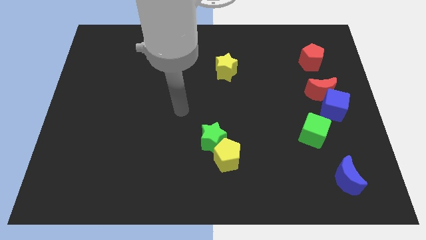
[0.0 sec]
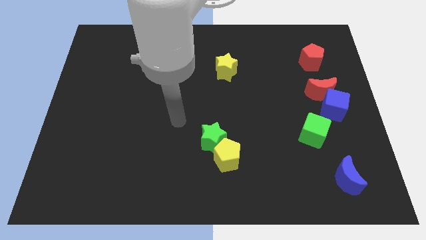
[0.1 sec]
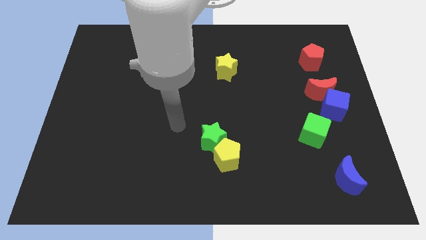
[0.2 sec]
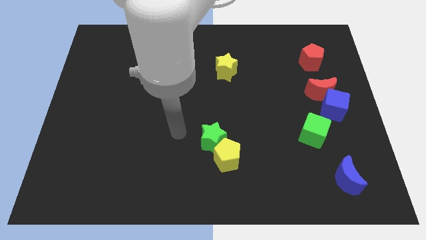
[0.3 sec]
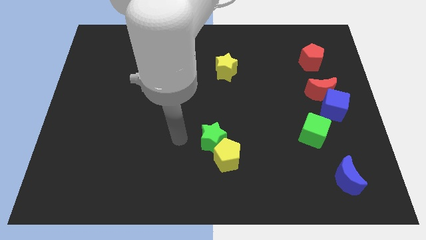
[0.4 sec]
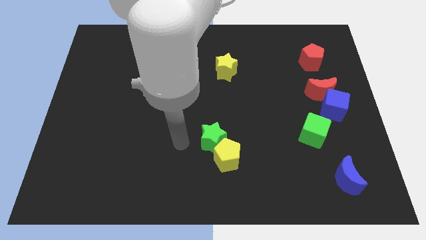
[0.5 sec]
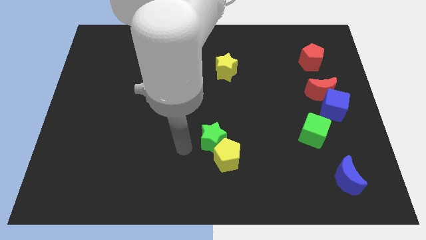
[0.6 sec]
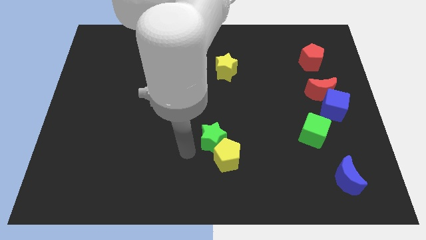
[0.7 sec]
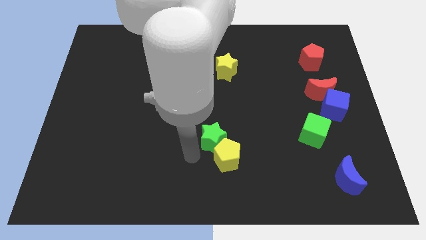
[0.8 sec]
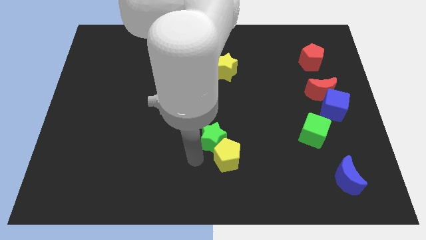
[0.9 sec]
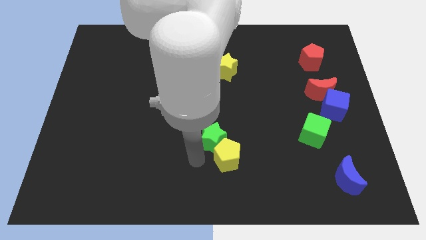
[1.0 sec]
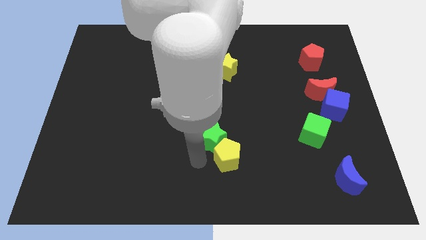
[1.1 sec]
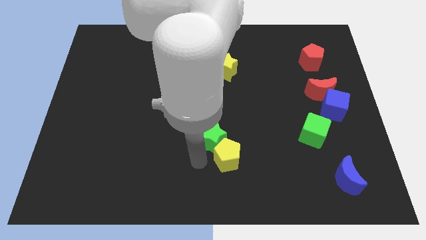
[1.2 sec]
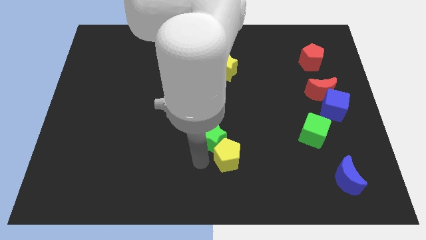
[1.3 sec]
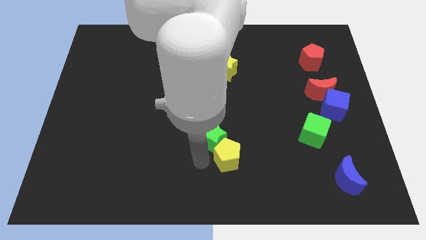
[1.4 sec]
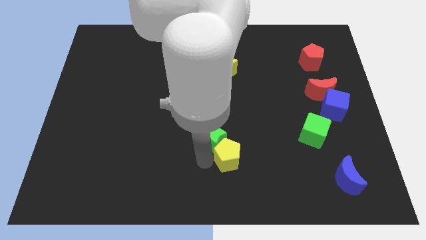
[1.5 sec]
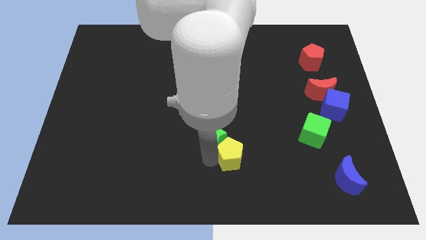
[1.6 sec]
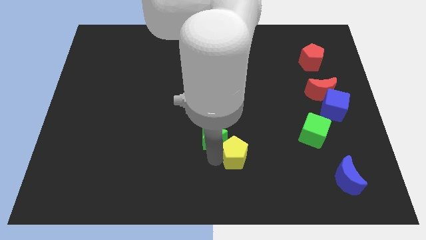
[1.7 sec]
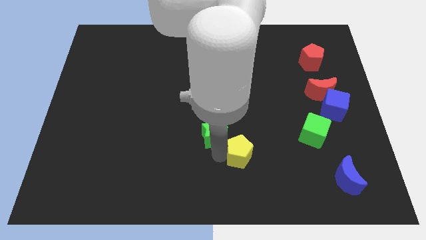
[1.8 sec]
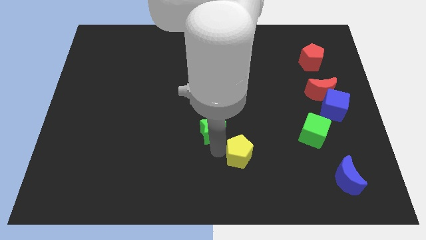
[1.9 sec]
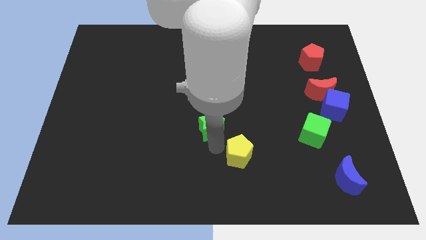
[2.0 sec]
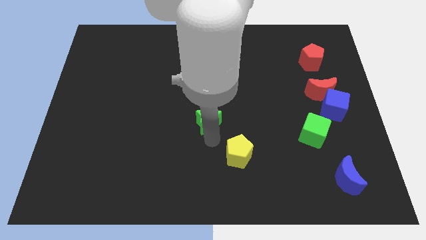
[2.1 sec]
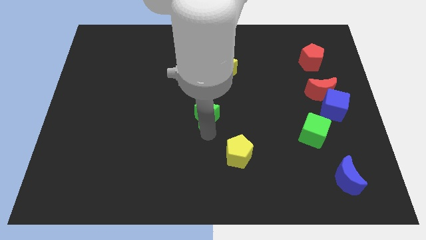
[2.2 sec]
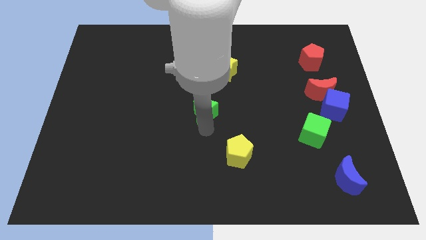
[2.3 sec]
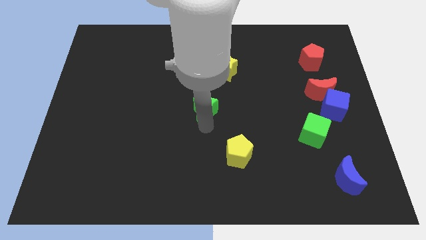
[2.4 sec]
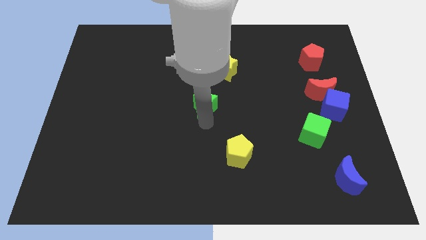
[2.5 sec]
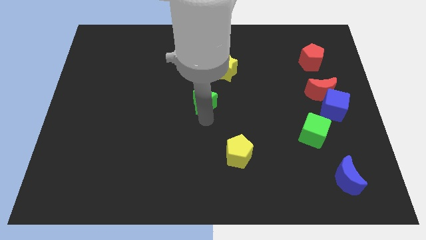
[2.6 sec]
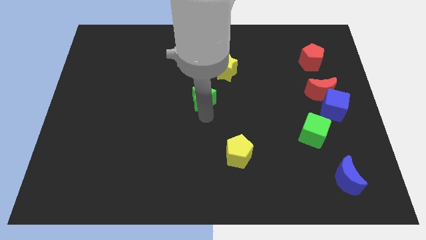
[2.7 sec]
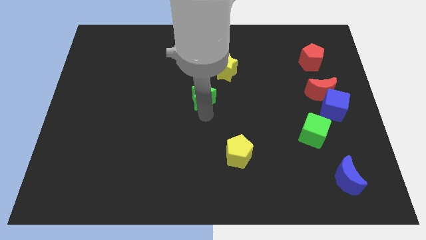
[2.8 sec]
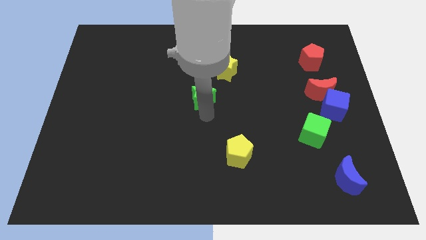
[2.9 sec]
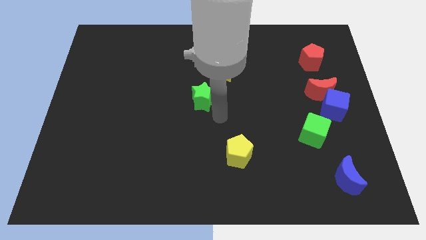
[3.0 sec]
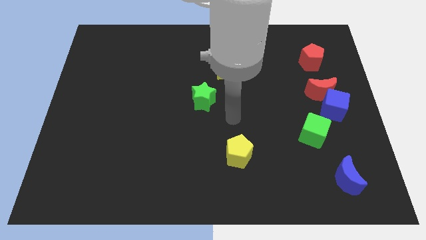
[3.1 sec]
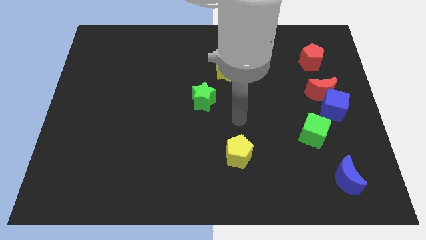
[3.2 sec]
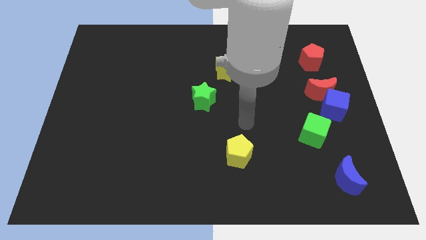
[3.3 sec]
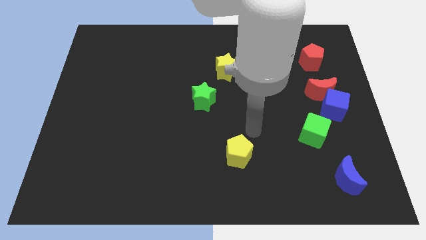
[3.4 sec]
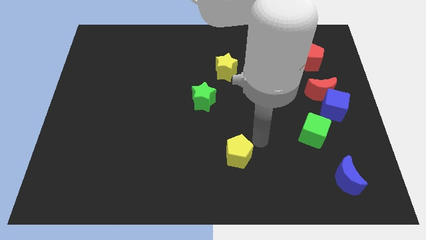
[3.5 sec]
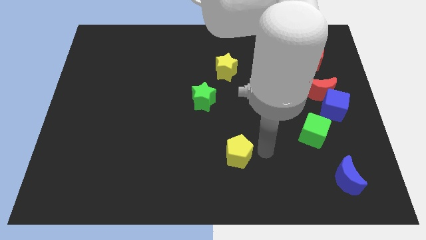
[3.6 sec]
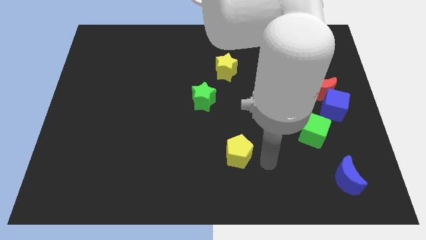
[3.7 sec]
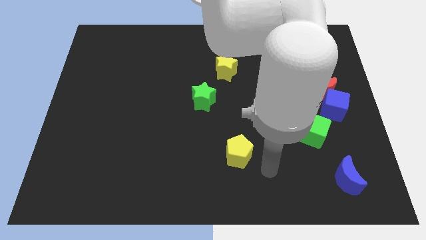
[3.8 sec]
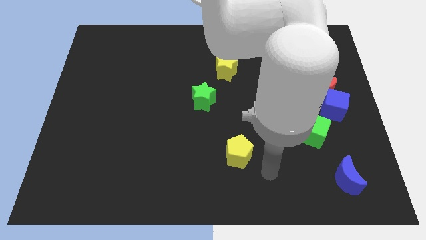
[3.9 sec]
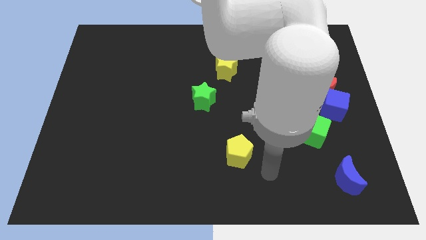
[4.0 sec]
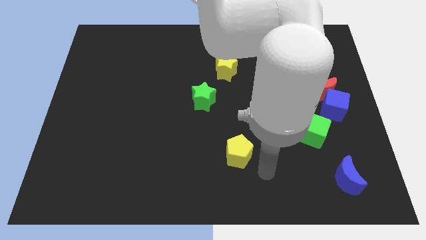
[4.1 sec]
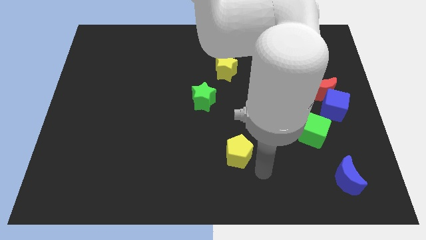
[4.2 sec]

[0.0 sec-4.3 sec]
separate the green star from the yellow pentagon

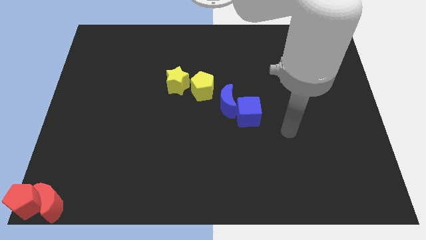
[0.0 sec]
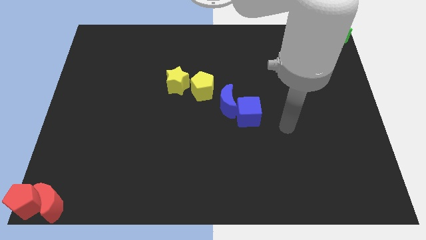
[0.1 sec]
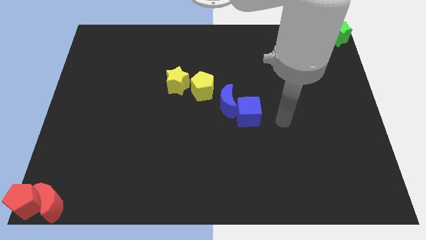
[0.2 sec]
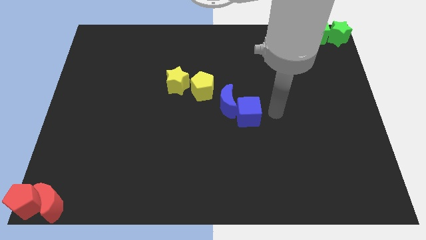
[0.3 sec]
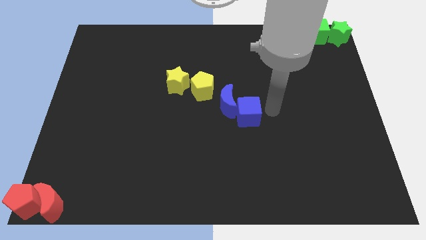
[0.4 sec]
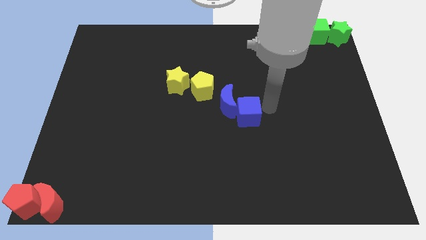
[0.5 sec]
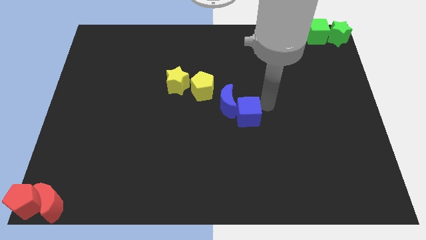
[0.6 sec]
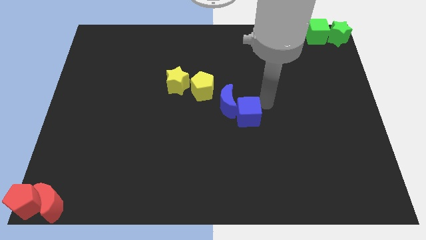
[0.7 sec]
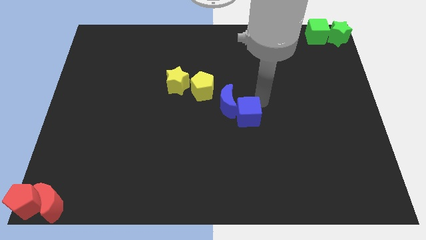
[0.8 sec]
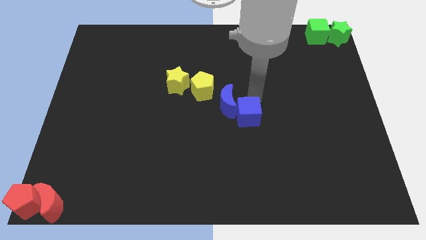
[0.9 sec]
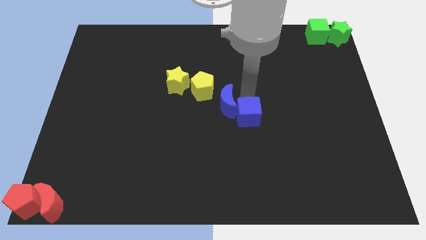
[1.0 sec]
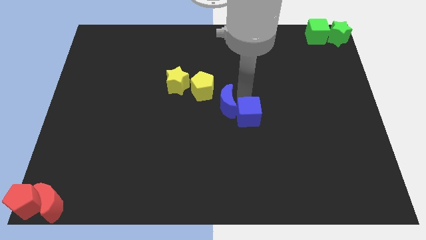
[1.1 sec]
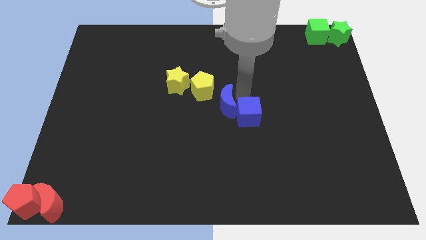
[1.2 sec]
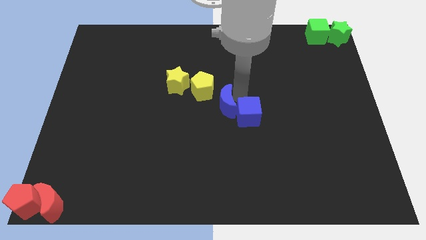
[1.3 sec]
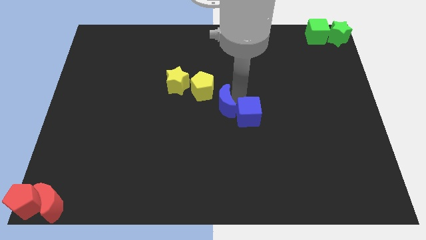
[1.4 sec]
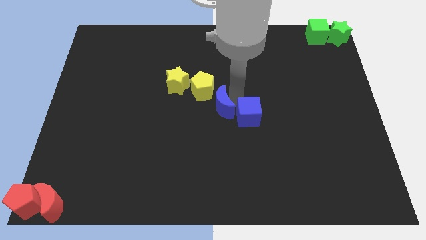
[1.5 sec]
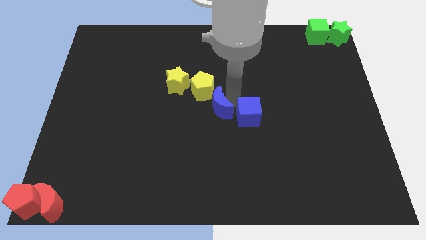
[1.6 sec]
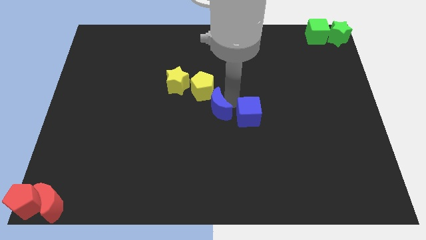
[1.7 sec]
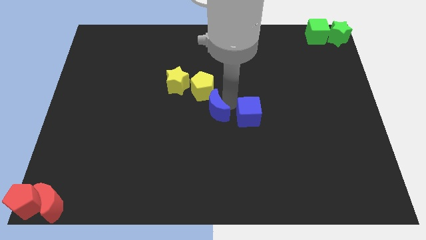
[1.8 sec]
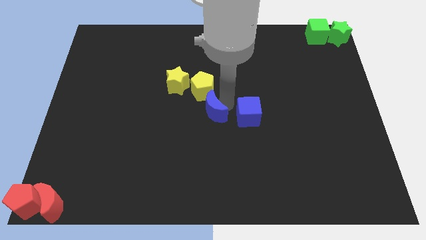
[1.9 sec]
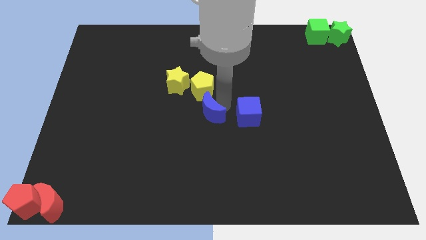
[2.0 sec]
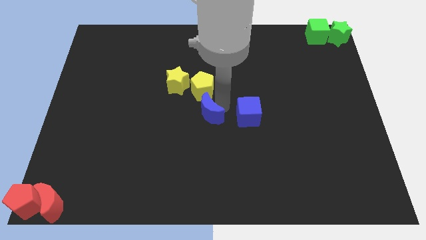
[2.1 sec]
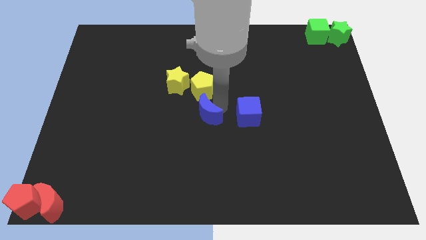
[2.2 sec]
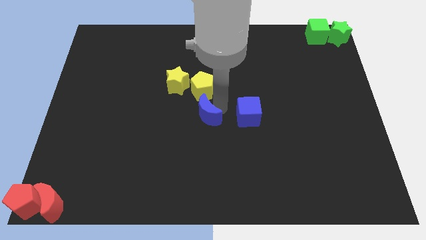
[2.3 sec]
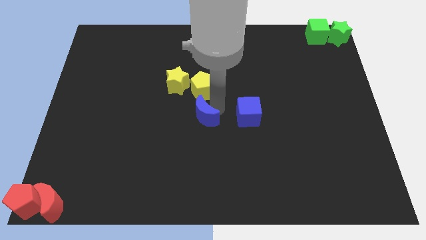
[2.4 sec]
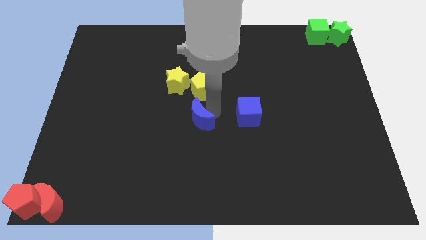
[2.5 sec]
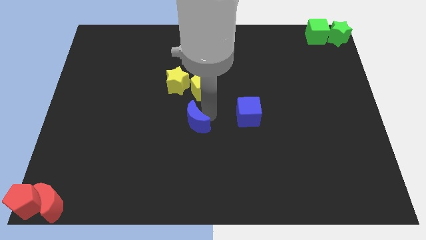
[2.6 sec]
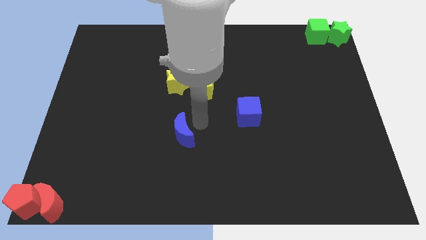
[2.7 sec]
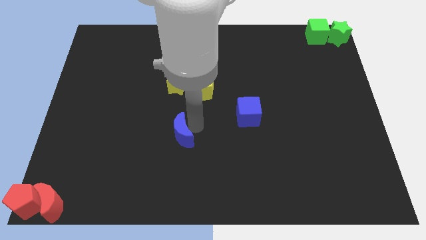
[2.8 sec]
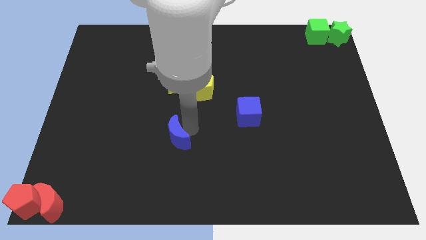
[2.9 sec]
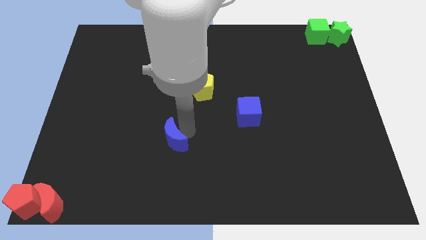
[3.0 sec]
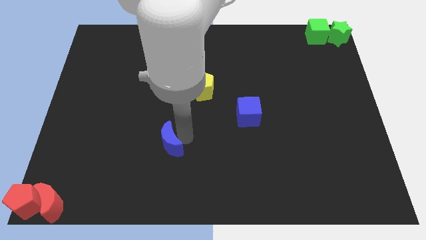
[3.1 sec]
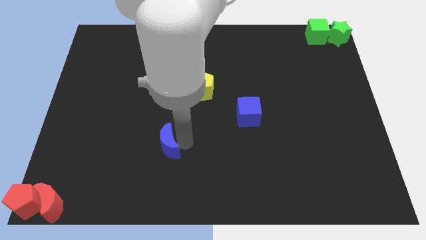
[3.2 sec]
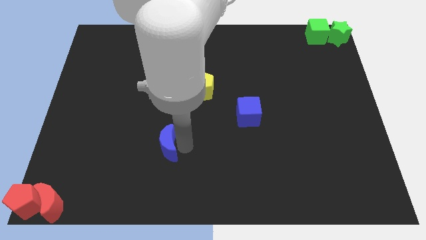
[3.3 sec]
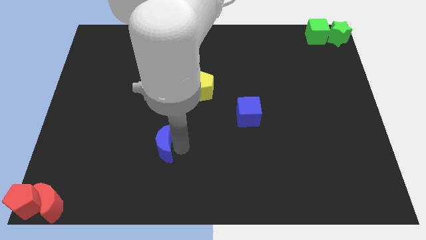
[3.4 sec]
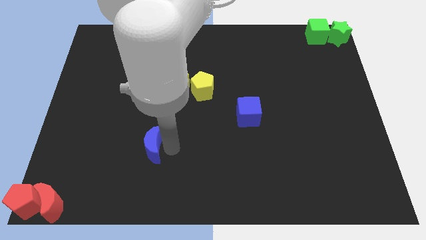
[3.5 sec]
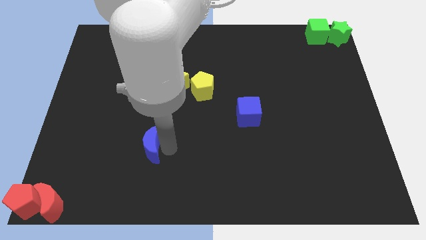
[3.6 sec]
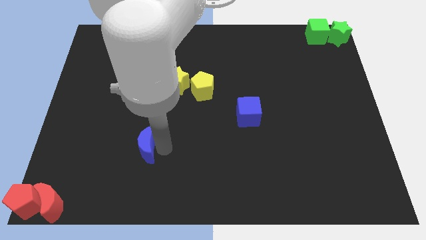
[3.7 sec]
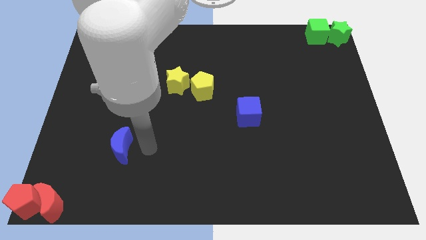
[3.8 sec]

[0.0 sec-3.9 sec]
move the blue crescent towards the red crescent

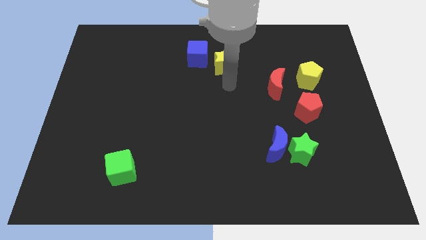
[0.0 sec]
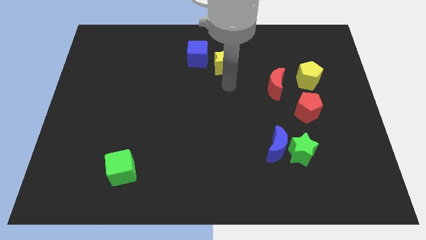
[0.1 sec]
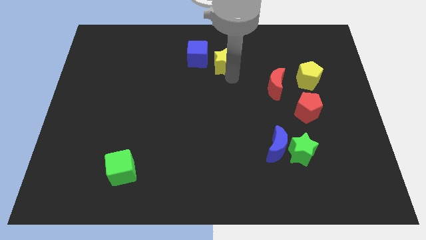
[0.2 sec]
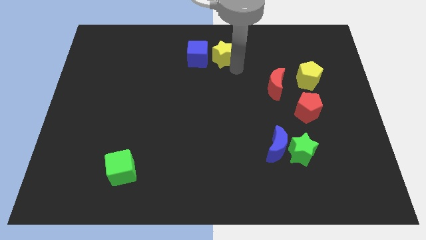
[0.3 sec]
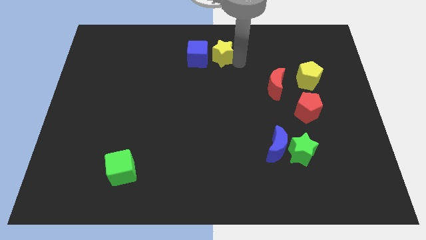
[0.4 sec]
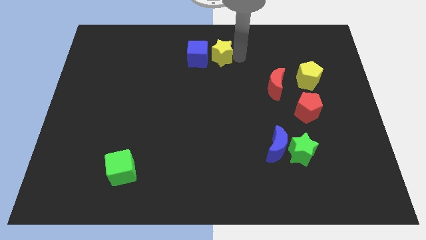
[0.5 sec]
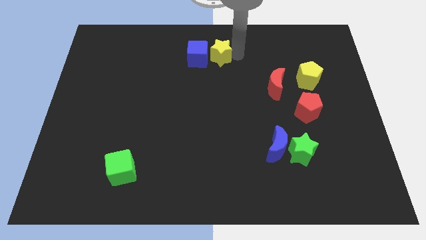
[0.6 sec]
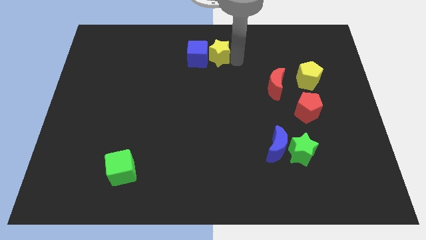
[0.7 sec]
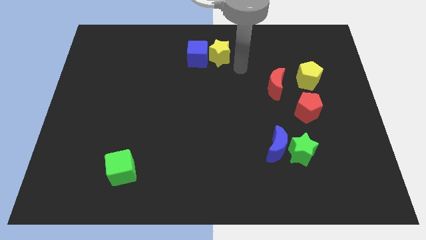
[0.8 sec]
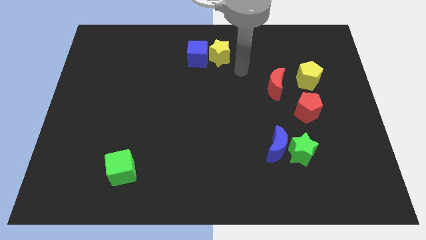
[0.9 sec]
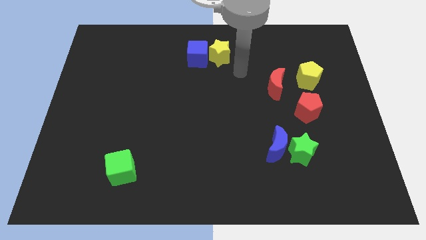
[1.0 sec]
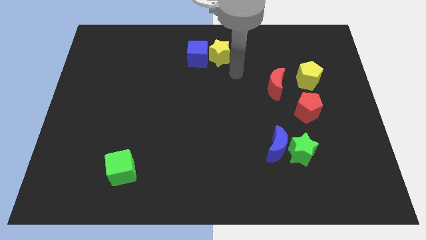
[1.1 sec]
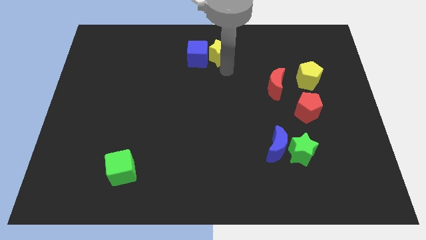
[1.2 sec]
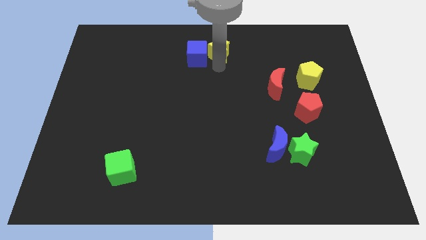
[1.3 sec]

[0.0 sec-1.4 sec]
move the yellow star into the blue cube
